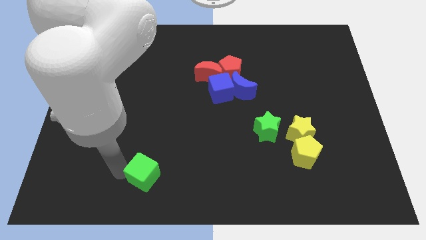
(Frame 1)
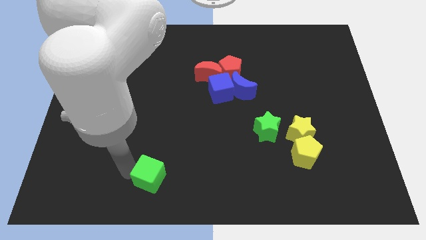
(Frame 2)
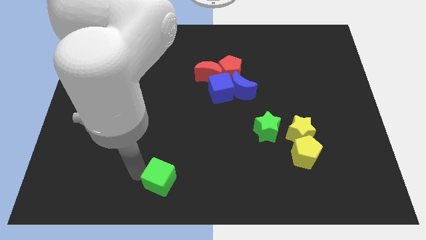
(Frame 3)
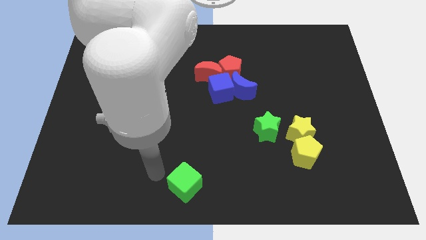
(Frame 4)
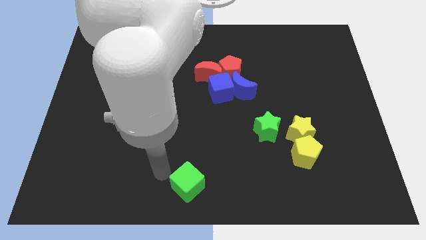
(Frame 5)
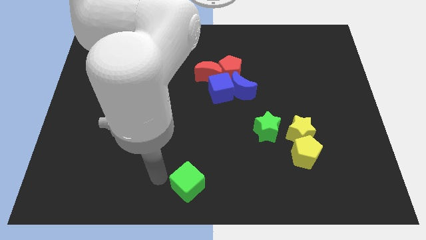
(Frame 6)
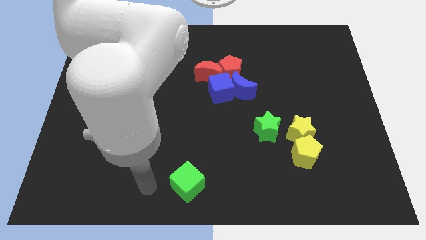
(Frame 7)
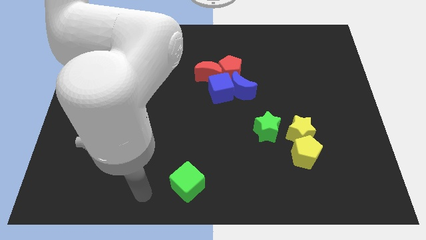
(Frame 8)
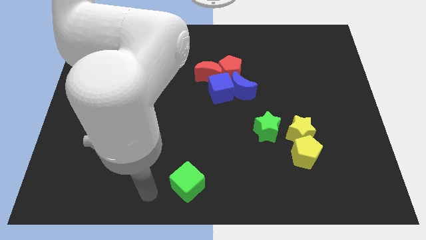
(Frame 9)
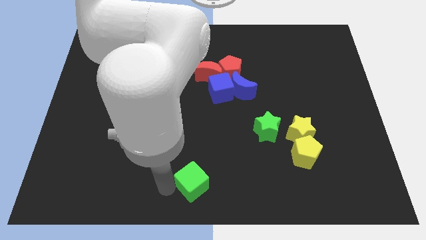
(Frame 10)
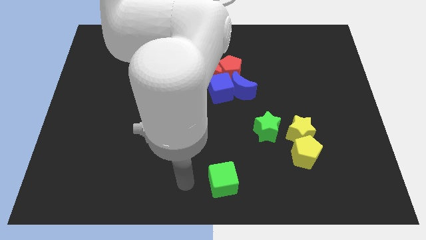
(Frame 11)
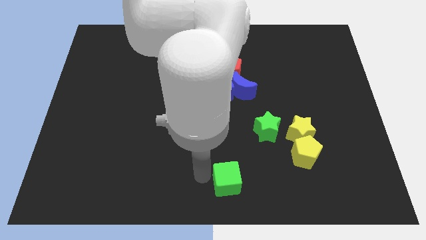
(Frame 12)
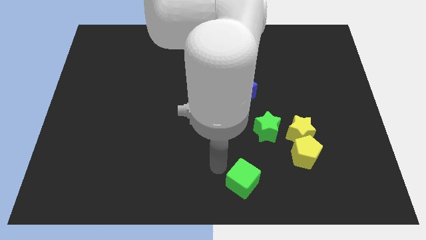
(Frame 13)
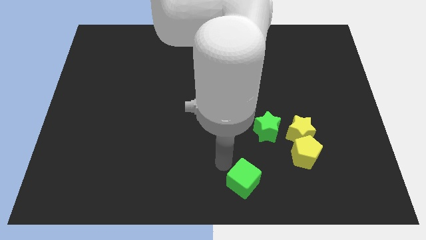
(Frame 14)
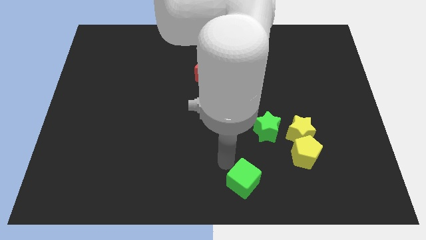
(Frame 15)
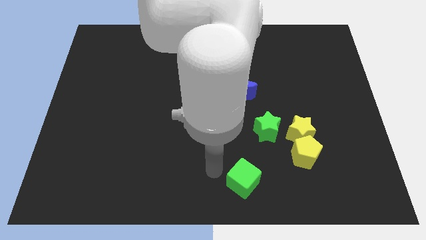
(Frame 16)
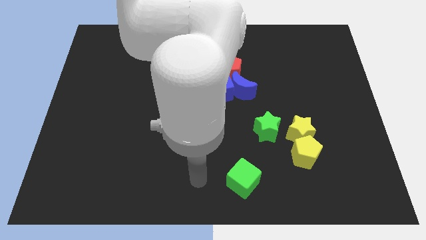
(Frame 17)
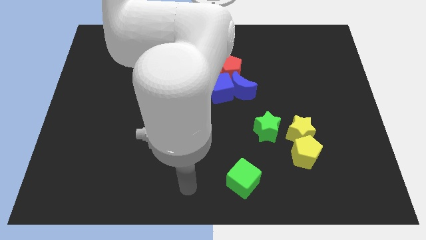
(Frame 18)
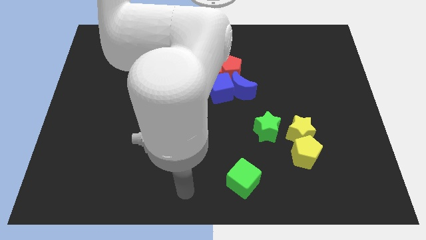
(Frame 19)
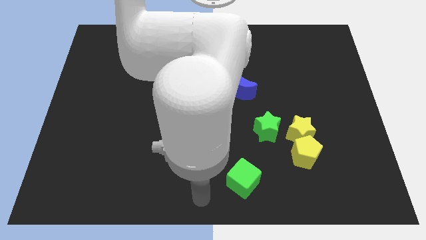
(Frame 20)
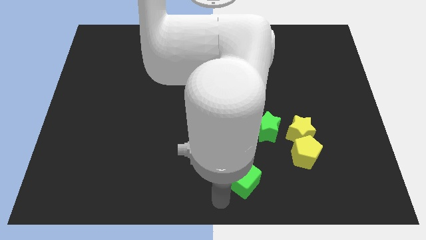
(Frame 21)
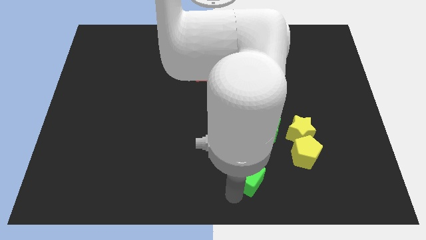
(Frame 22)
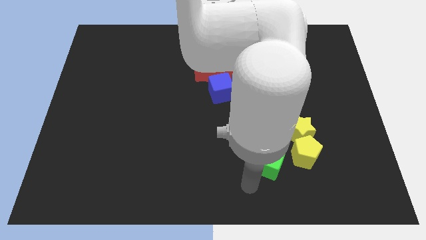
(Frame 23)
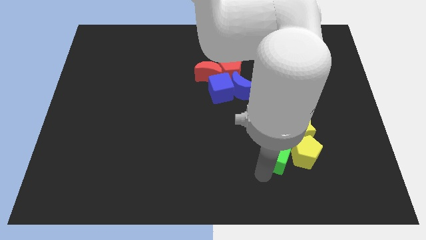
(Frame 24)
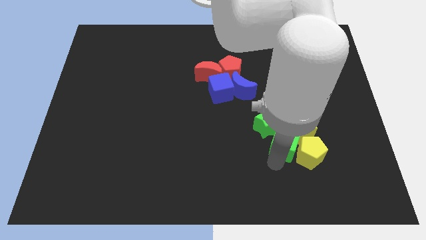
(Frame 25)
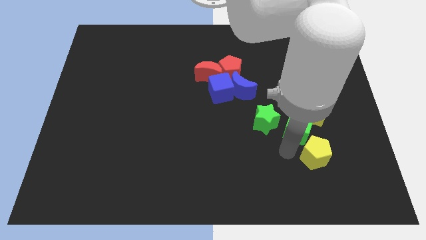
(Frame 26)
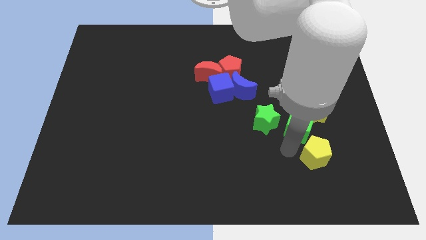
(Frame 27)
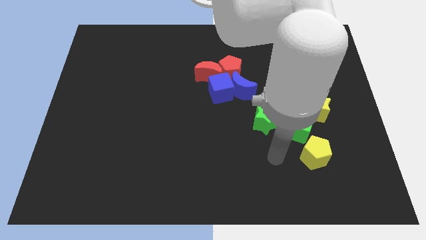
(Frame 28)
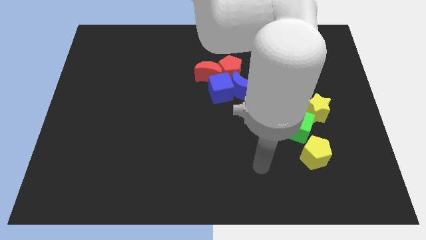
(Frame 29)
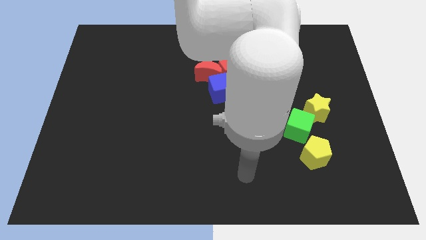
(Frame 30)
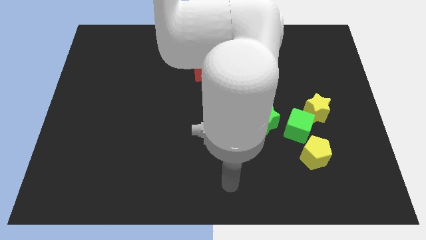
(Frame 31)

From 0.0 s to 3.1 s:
push the green cube into the yellow star

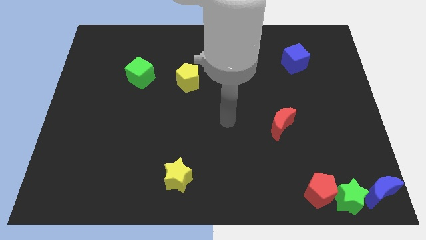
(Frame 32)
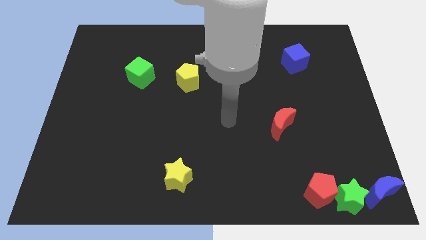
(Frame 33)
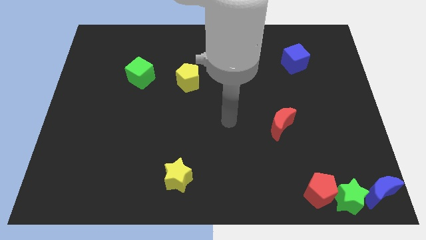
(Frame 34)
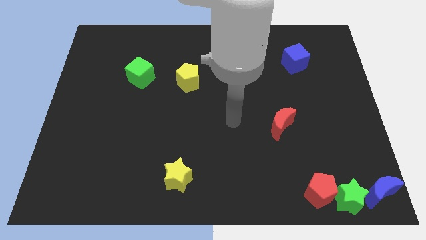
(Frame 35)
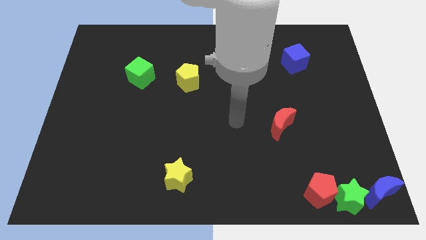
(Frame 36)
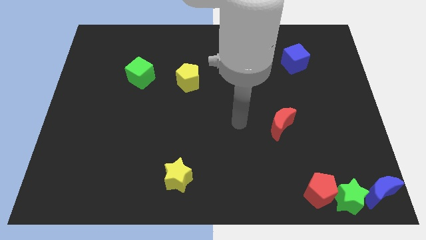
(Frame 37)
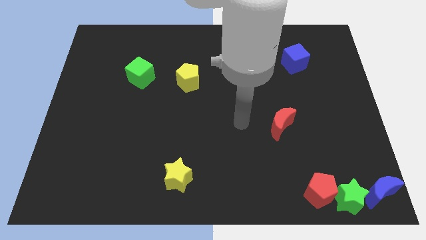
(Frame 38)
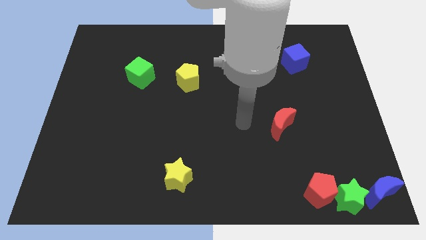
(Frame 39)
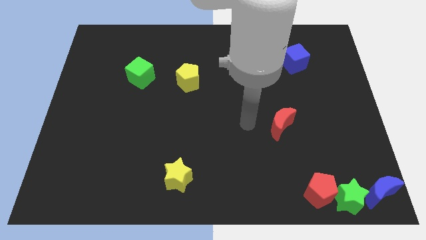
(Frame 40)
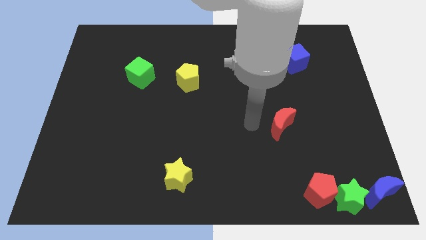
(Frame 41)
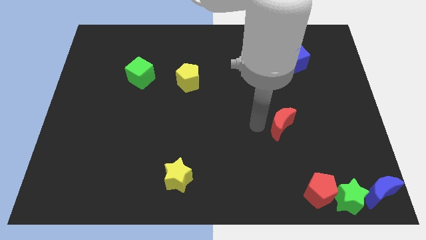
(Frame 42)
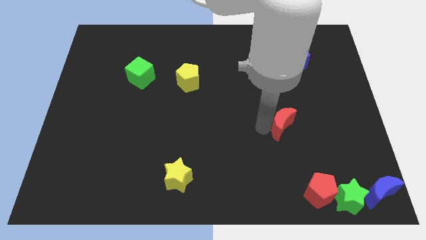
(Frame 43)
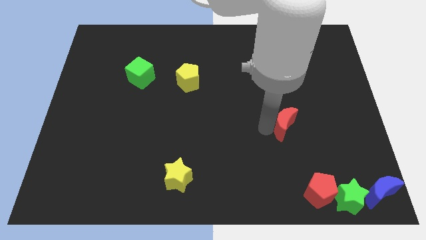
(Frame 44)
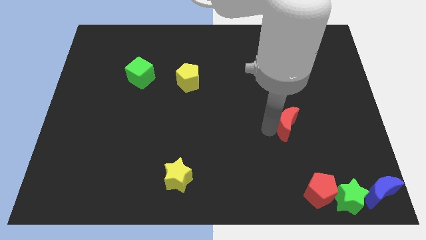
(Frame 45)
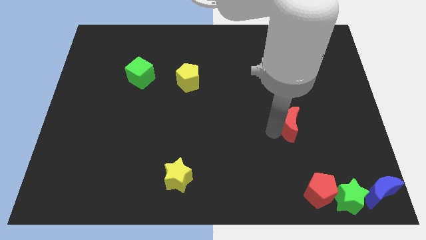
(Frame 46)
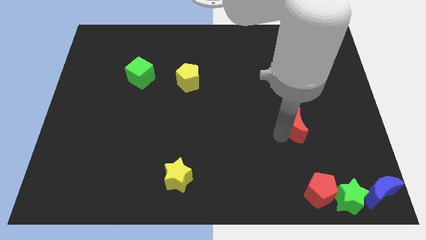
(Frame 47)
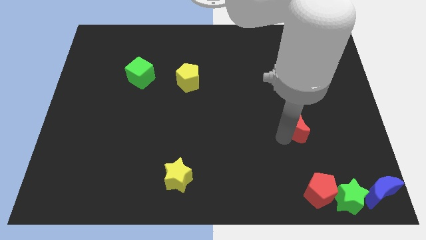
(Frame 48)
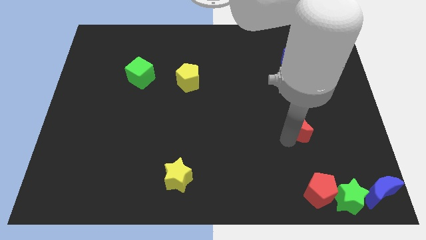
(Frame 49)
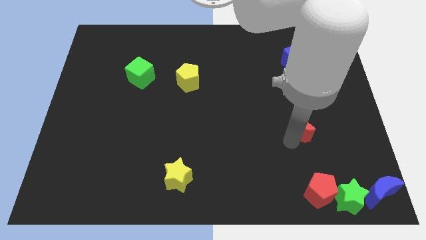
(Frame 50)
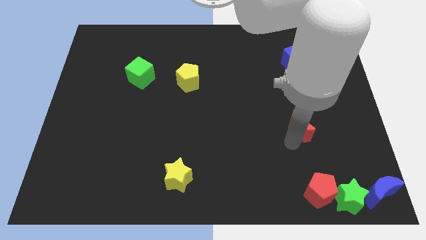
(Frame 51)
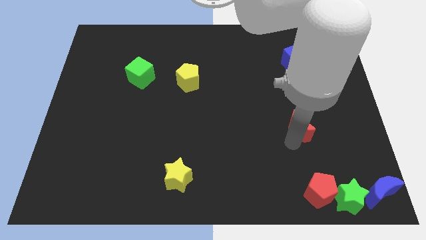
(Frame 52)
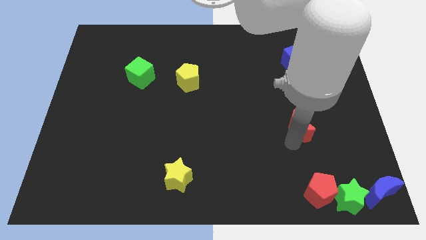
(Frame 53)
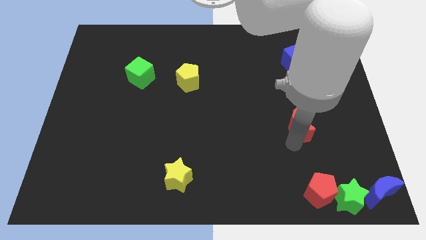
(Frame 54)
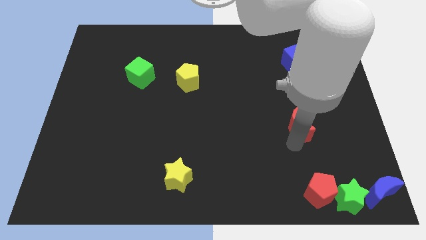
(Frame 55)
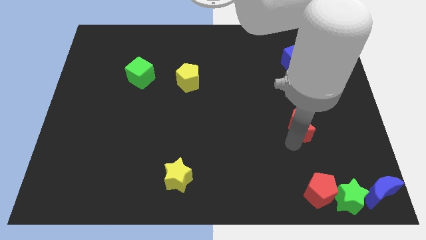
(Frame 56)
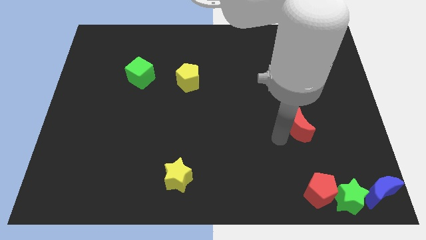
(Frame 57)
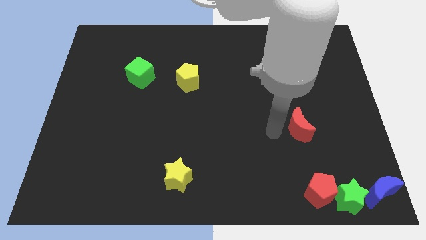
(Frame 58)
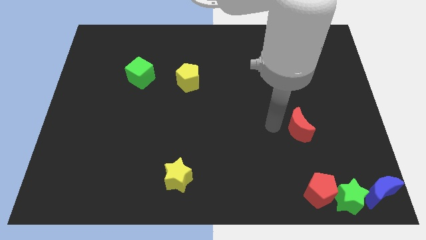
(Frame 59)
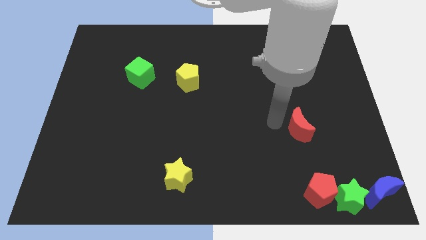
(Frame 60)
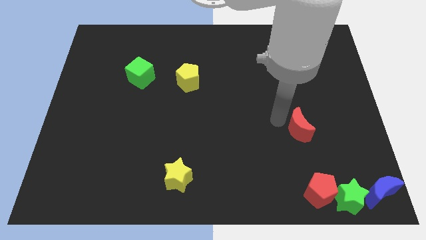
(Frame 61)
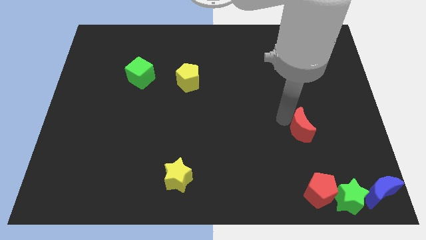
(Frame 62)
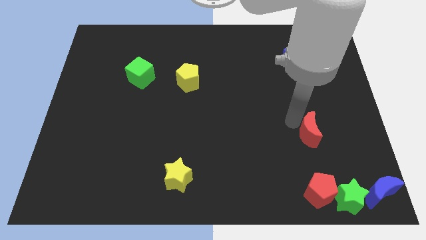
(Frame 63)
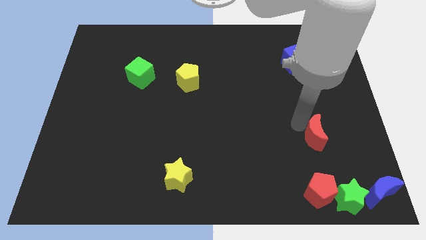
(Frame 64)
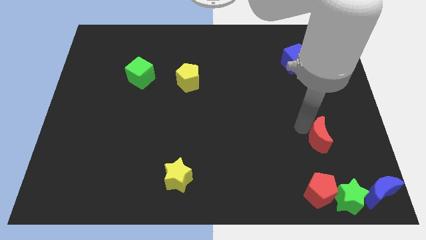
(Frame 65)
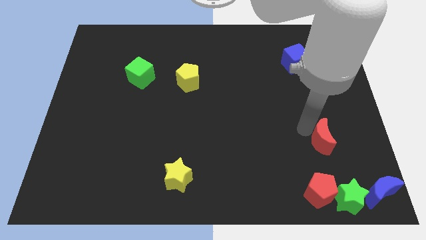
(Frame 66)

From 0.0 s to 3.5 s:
put the red moon vertically above the red pentagon

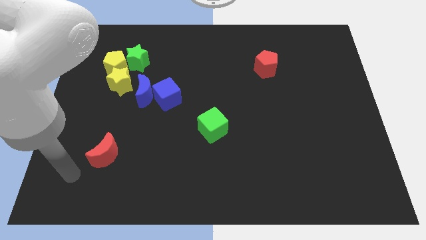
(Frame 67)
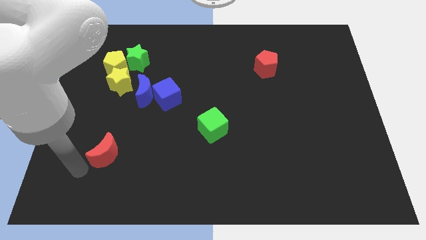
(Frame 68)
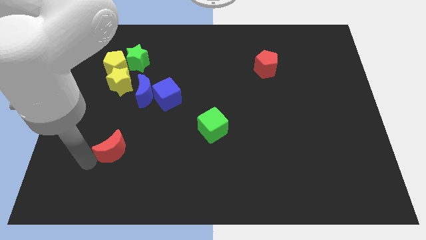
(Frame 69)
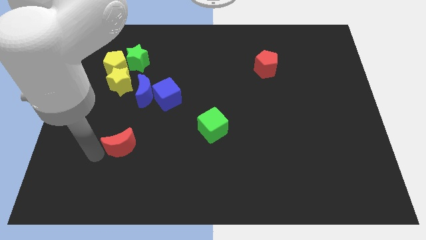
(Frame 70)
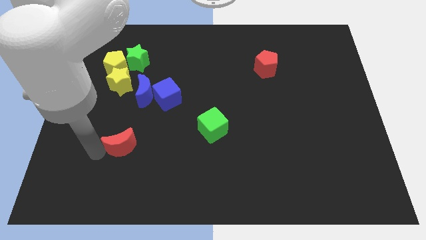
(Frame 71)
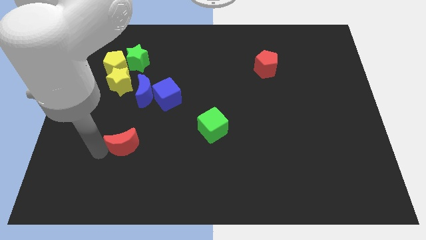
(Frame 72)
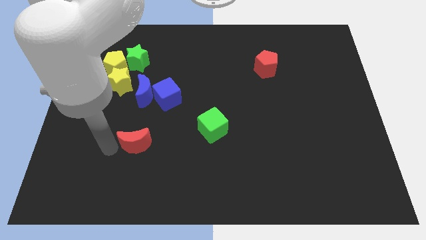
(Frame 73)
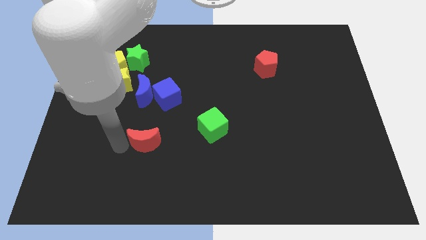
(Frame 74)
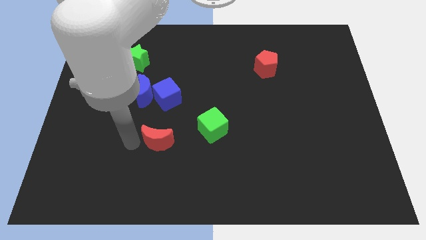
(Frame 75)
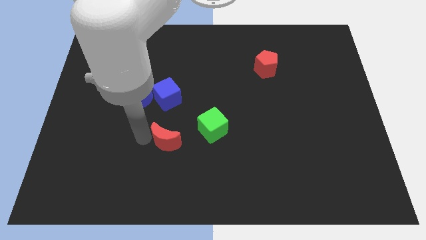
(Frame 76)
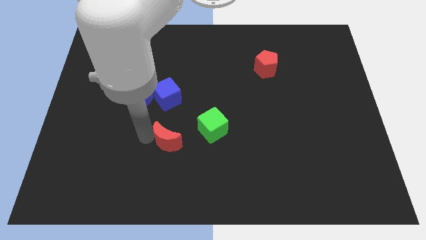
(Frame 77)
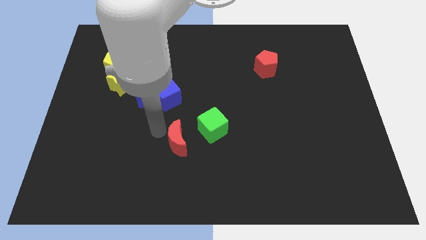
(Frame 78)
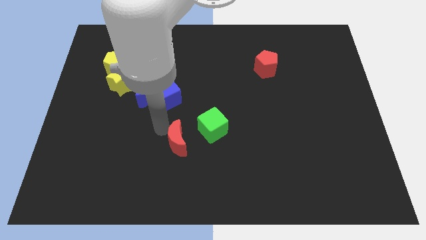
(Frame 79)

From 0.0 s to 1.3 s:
push the redd moon to the left of the green cube

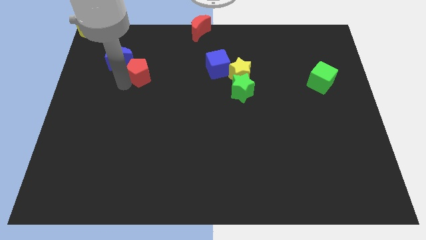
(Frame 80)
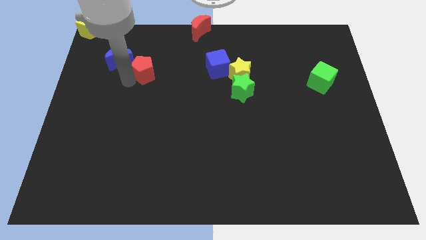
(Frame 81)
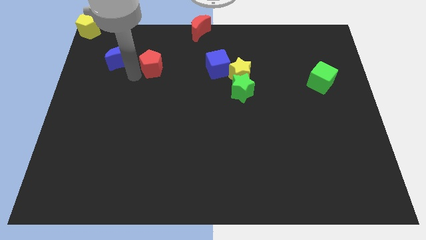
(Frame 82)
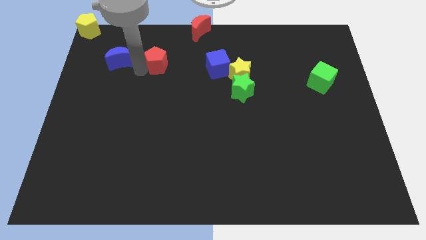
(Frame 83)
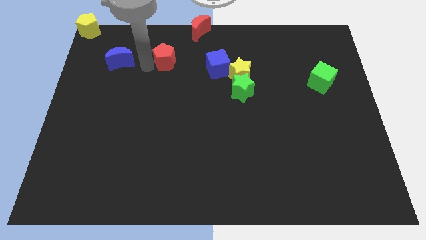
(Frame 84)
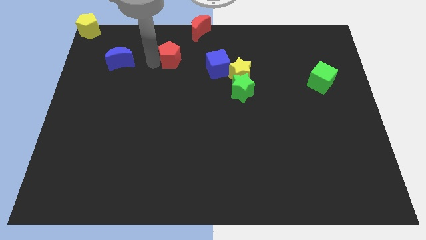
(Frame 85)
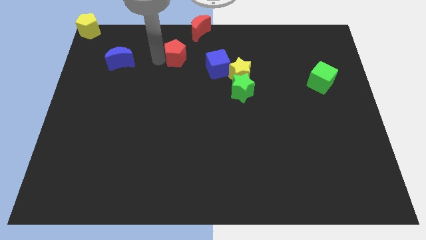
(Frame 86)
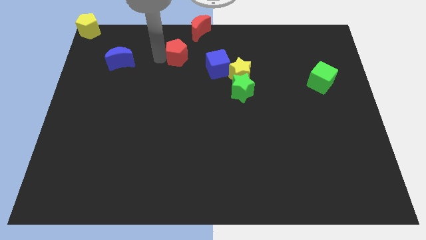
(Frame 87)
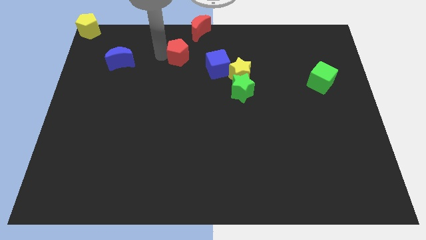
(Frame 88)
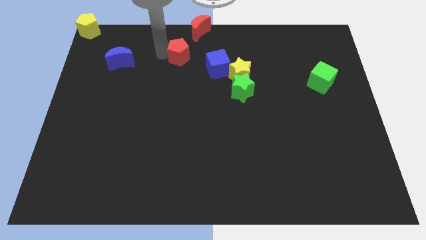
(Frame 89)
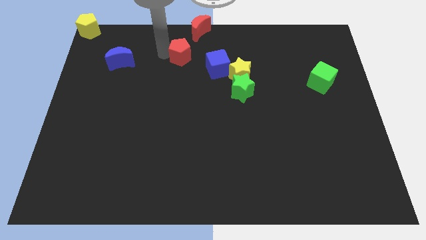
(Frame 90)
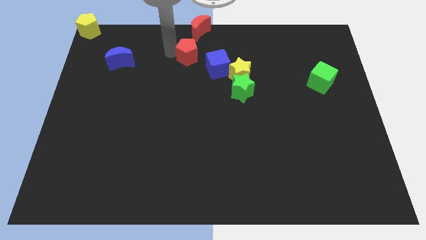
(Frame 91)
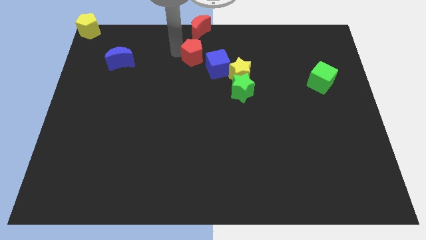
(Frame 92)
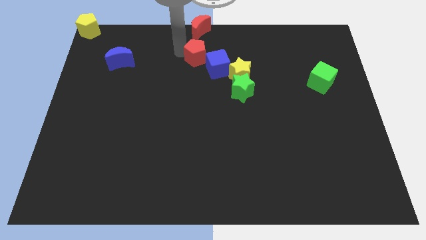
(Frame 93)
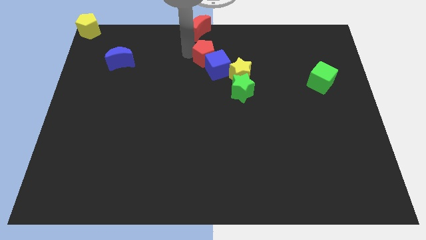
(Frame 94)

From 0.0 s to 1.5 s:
place red pentagon to the bottom of red moon
